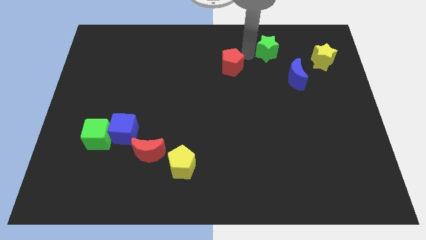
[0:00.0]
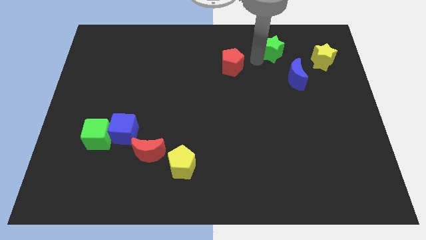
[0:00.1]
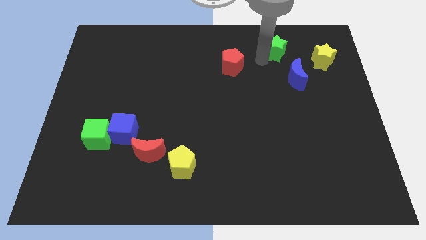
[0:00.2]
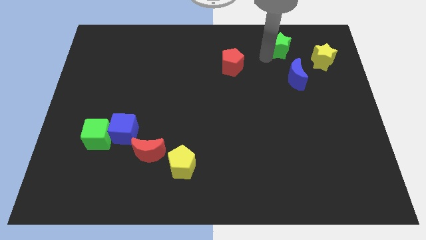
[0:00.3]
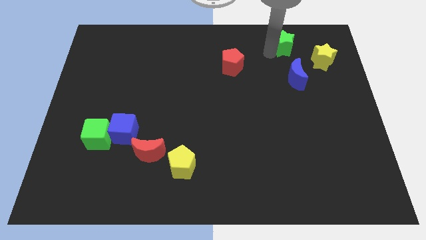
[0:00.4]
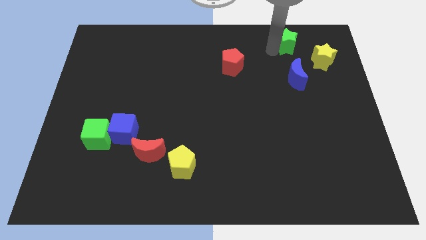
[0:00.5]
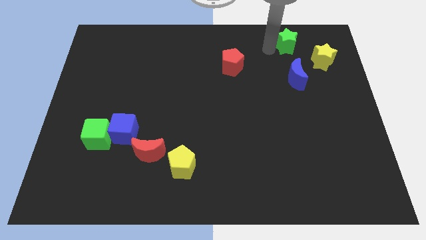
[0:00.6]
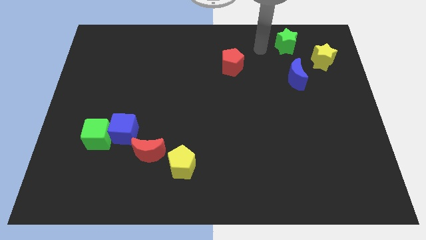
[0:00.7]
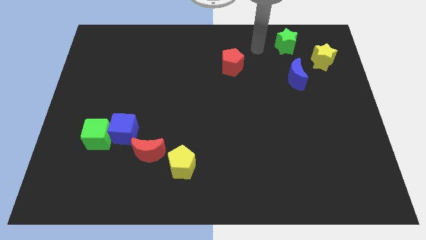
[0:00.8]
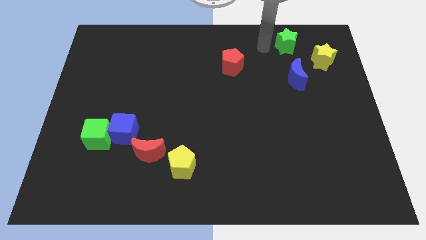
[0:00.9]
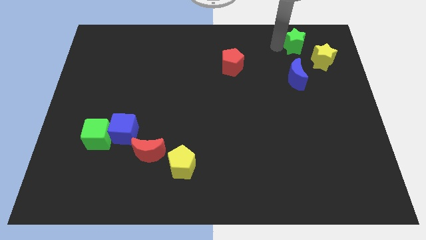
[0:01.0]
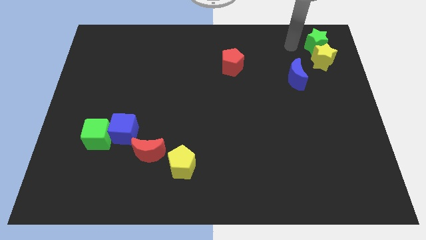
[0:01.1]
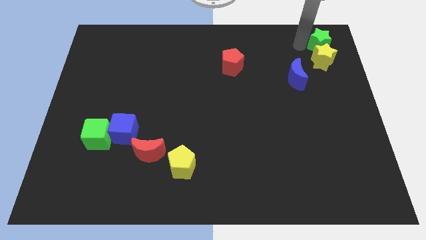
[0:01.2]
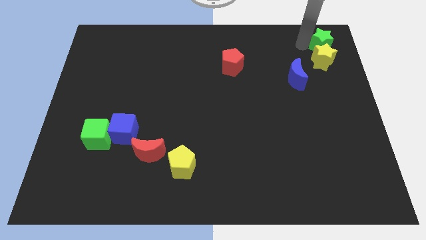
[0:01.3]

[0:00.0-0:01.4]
place the green star at the top of yellow star

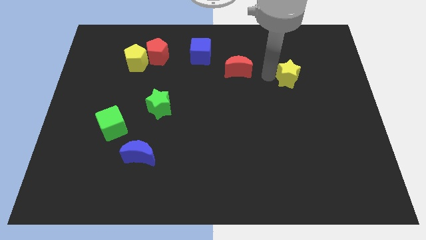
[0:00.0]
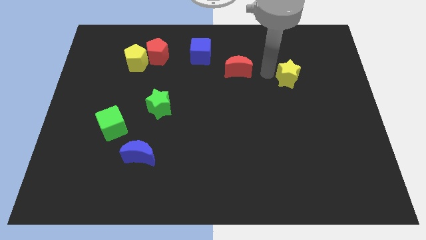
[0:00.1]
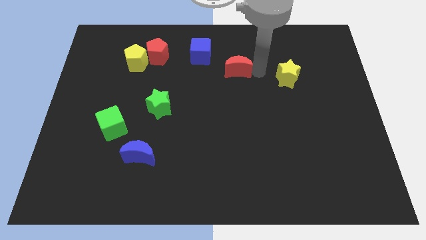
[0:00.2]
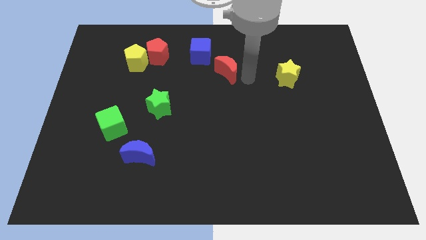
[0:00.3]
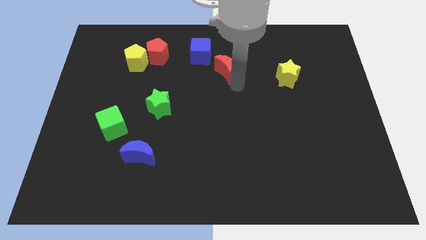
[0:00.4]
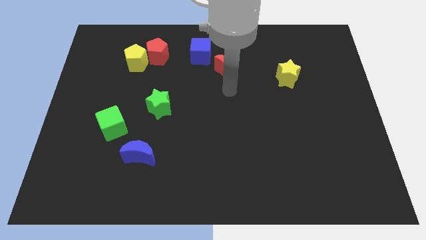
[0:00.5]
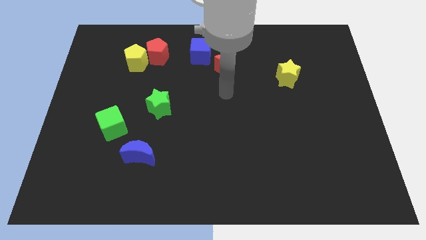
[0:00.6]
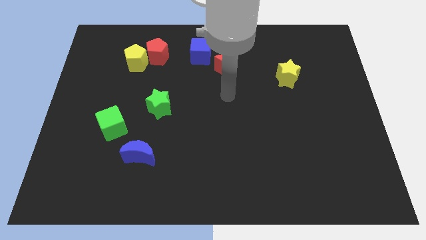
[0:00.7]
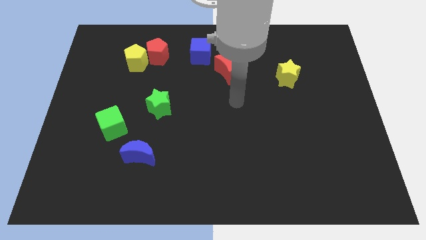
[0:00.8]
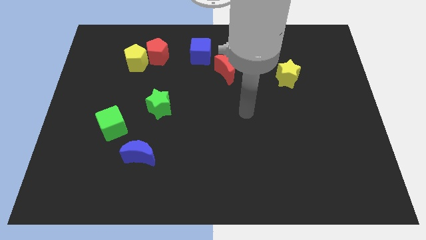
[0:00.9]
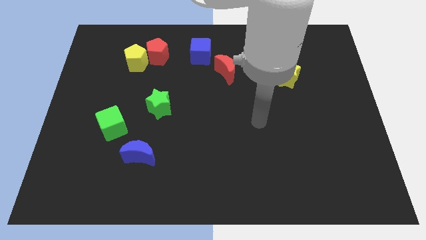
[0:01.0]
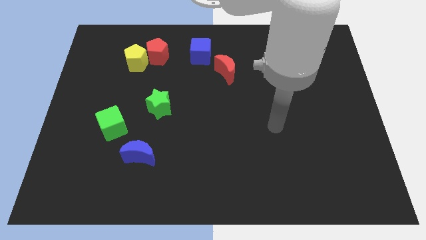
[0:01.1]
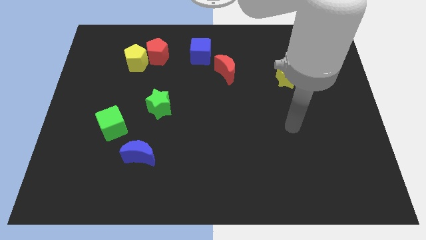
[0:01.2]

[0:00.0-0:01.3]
slide the red moon diagonally to the bottom right of the blue moon

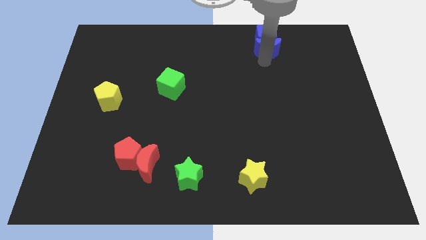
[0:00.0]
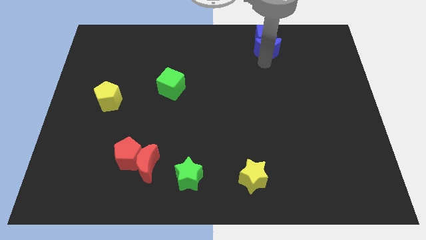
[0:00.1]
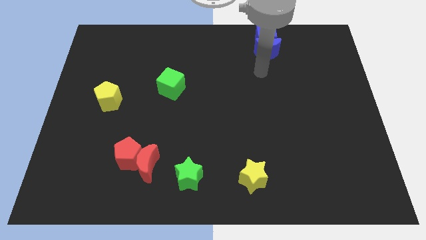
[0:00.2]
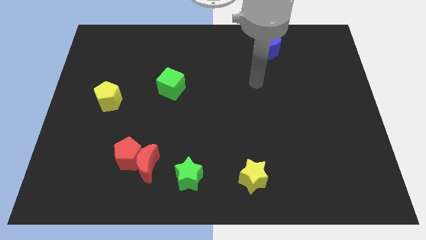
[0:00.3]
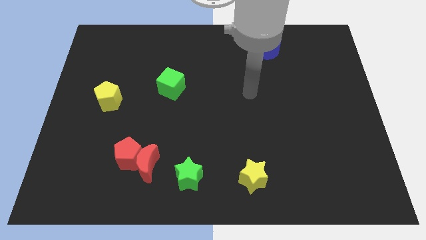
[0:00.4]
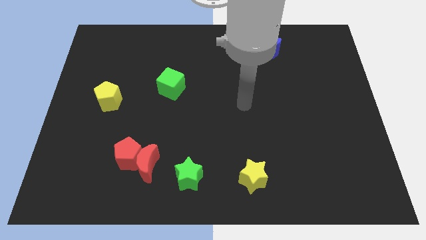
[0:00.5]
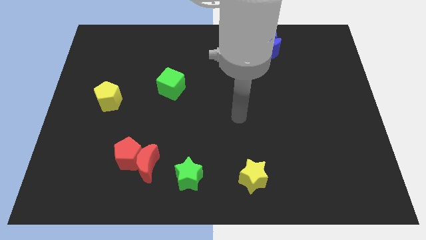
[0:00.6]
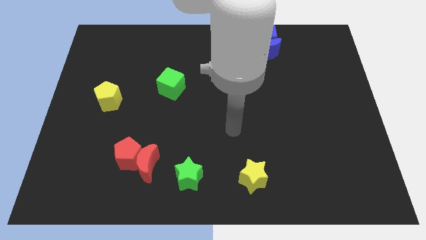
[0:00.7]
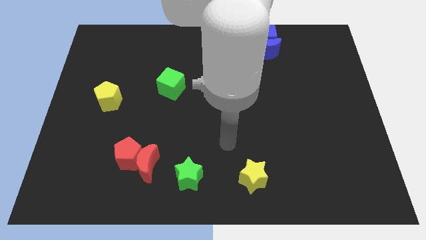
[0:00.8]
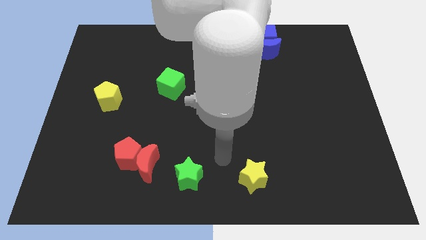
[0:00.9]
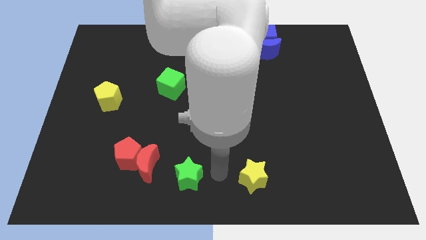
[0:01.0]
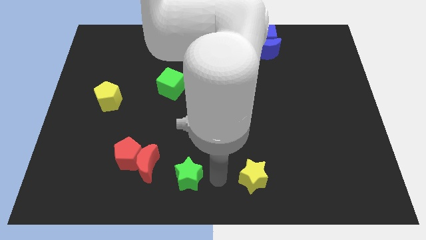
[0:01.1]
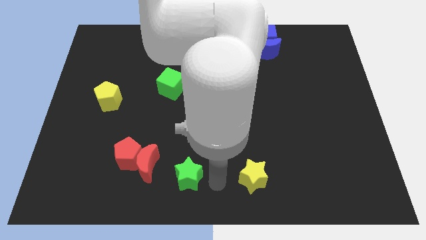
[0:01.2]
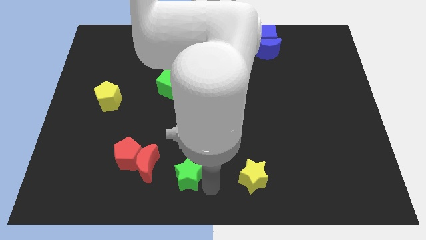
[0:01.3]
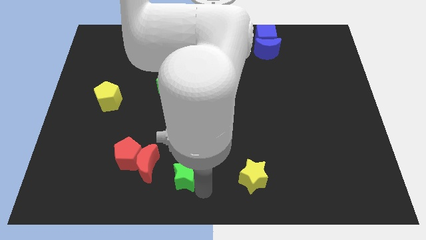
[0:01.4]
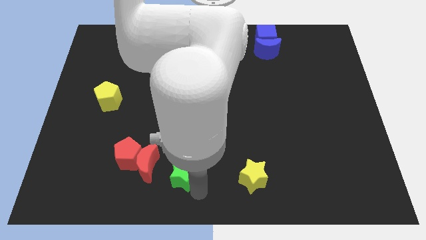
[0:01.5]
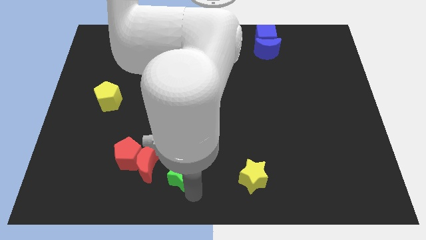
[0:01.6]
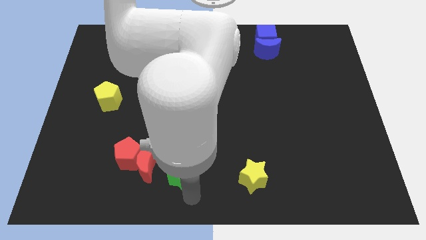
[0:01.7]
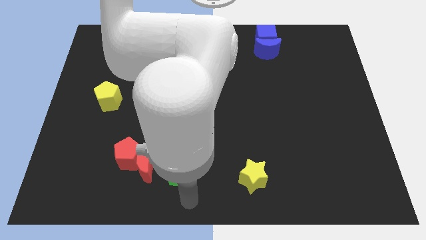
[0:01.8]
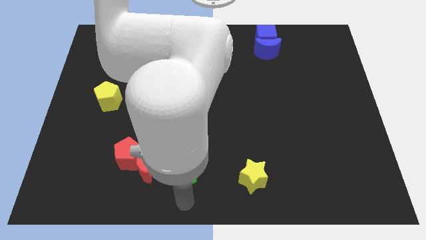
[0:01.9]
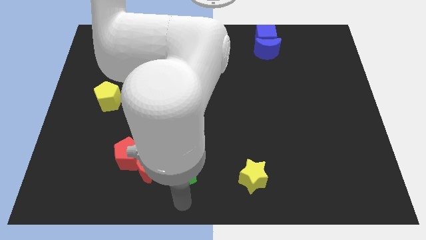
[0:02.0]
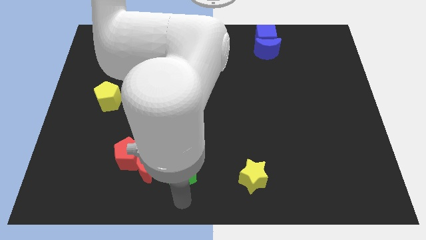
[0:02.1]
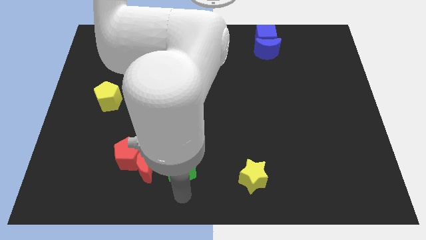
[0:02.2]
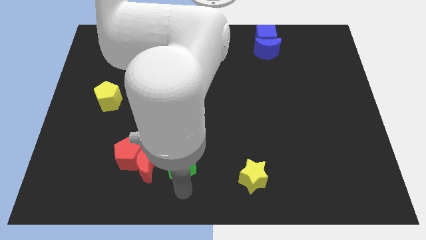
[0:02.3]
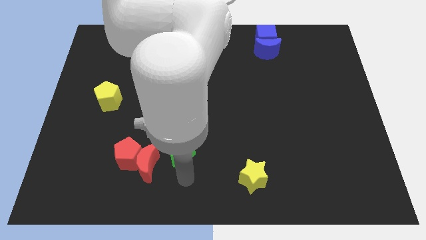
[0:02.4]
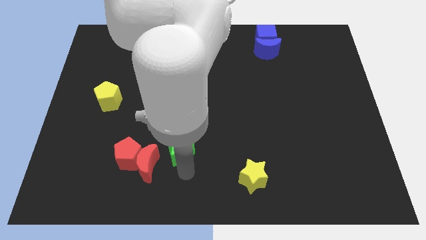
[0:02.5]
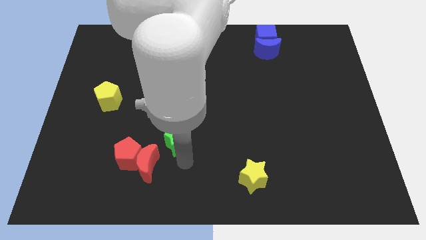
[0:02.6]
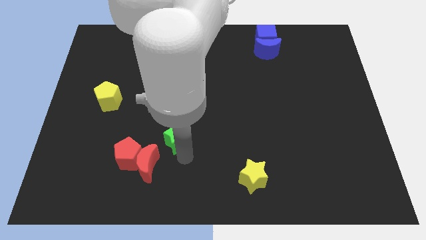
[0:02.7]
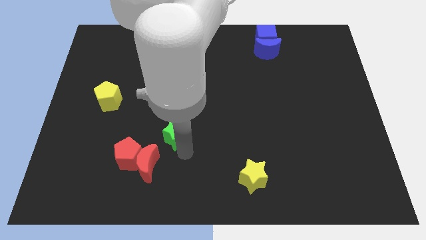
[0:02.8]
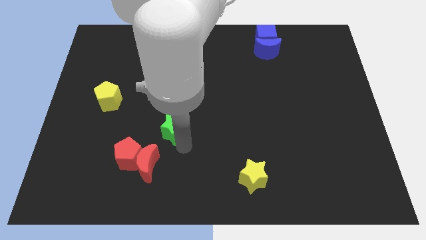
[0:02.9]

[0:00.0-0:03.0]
push the green star towards the top side of the board

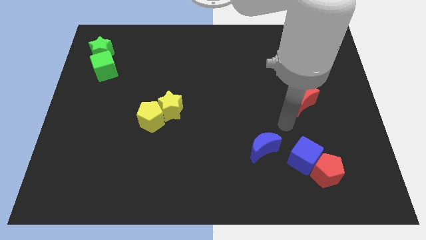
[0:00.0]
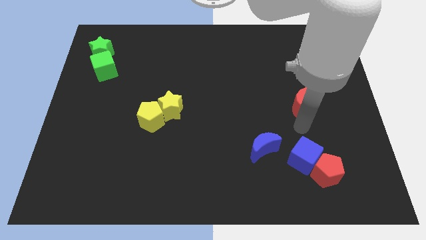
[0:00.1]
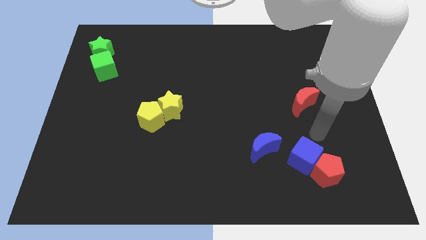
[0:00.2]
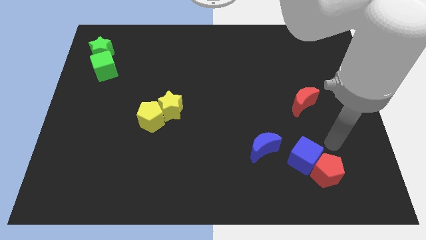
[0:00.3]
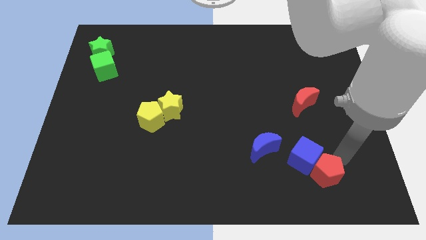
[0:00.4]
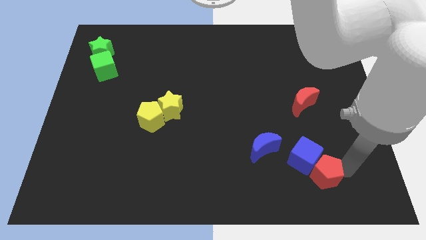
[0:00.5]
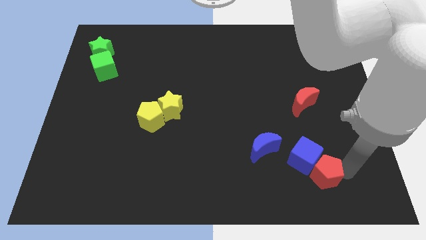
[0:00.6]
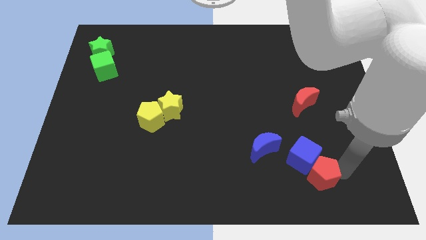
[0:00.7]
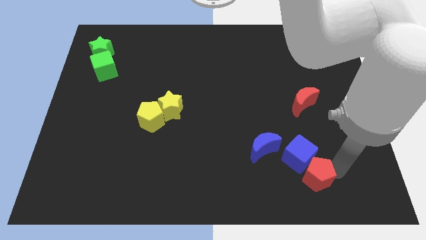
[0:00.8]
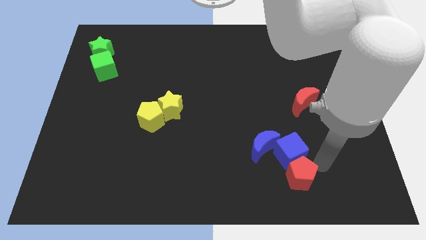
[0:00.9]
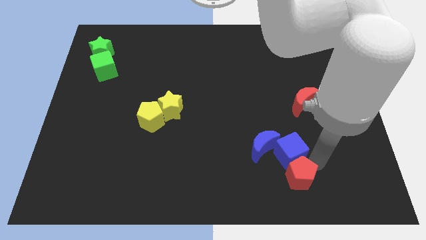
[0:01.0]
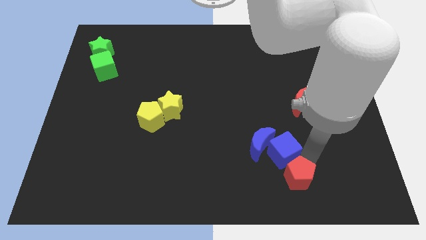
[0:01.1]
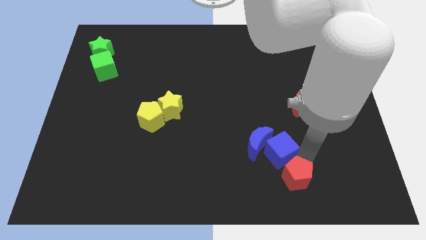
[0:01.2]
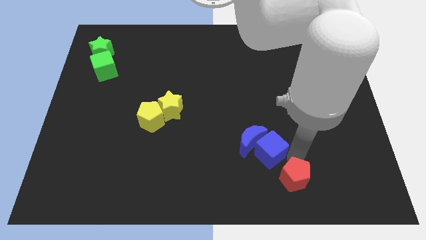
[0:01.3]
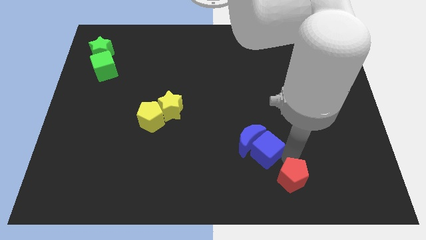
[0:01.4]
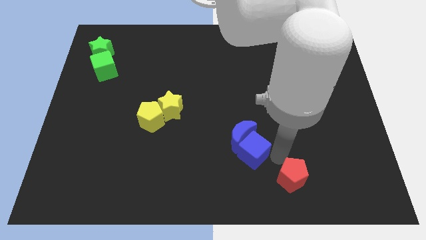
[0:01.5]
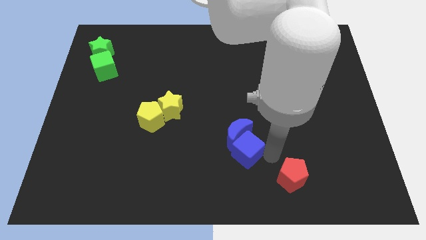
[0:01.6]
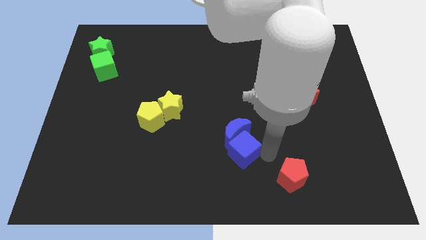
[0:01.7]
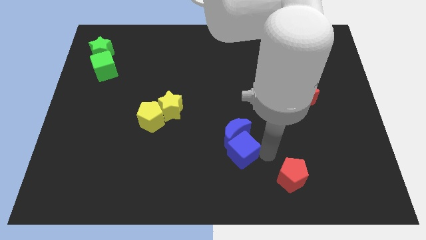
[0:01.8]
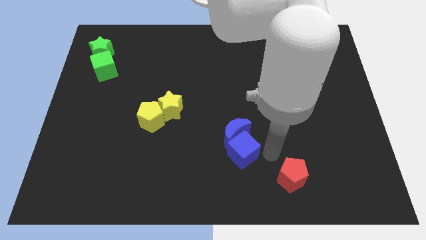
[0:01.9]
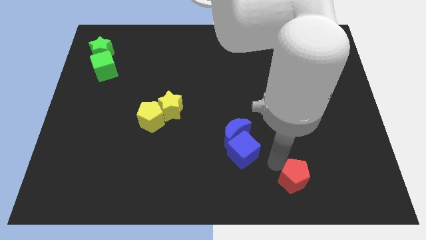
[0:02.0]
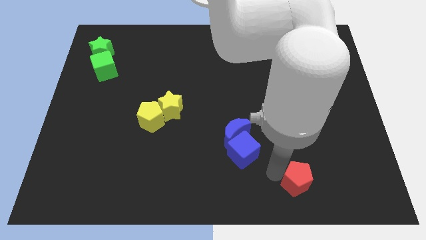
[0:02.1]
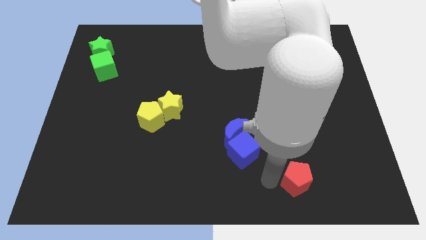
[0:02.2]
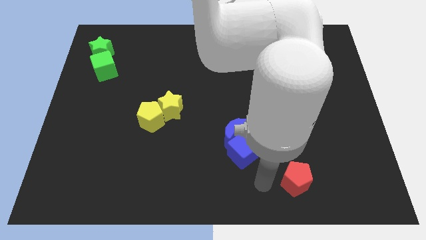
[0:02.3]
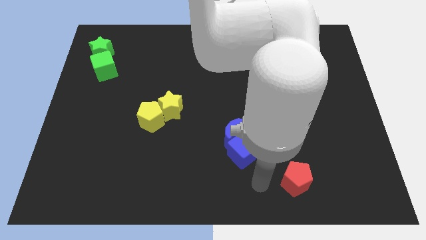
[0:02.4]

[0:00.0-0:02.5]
move blue blocks towards left side of the board

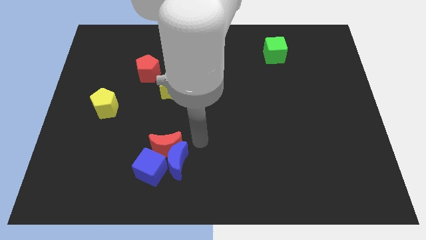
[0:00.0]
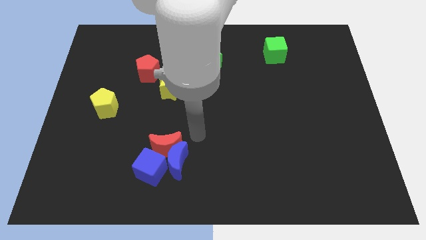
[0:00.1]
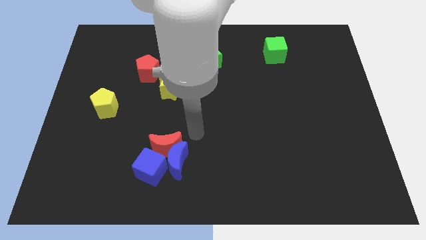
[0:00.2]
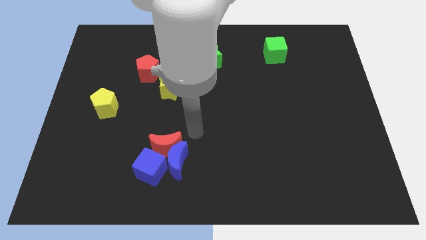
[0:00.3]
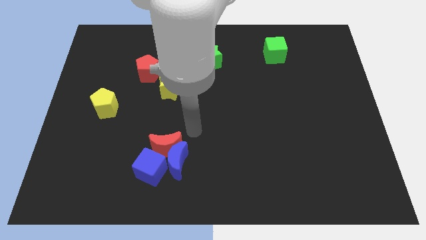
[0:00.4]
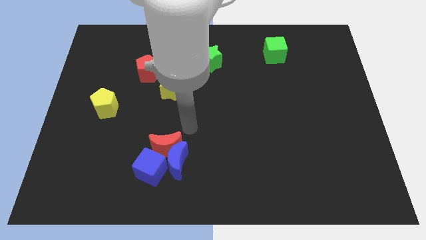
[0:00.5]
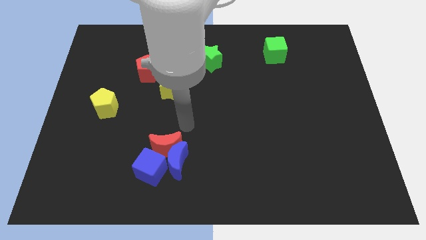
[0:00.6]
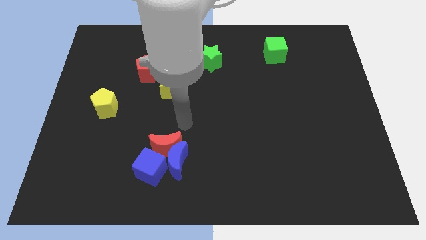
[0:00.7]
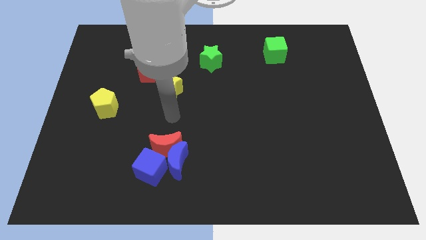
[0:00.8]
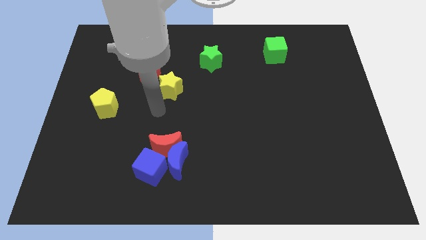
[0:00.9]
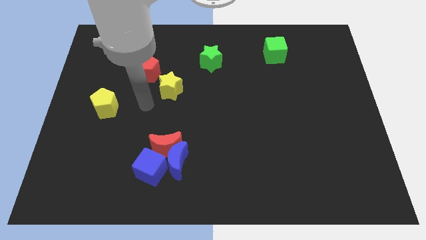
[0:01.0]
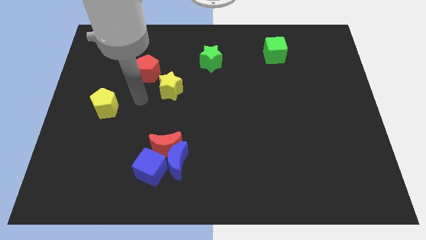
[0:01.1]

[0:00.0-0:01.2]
place the arm in between the yellow star and yellow pentagon
